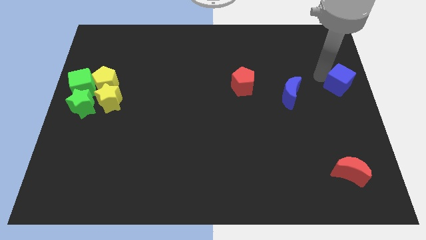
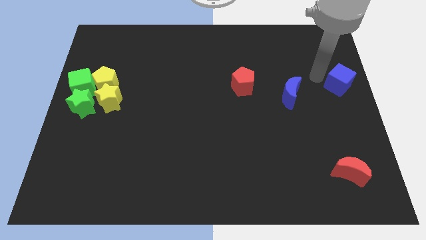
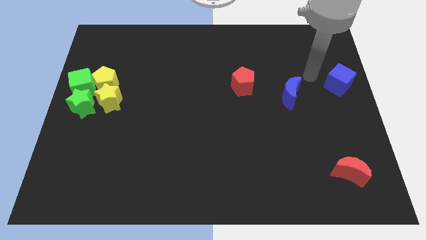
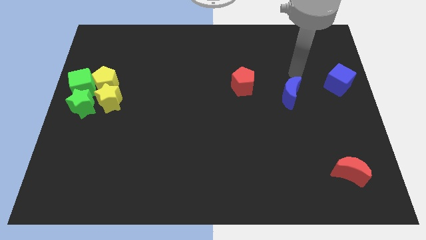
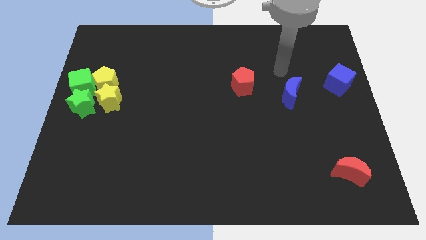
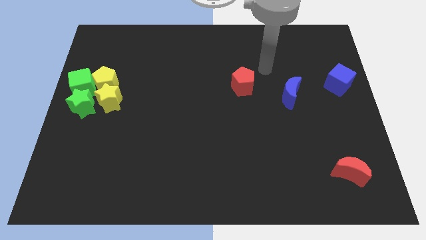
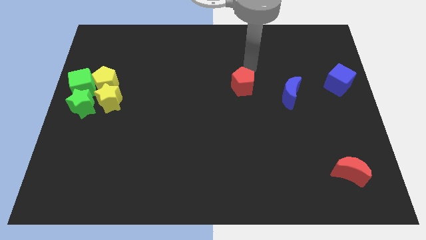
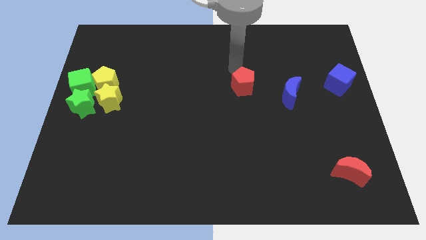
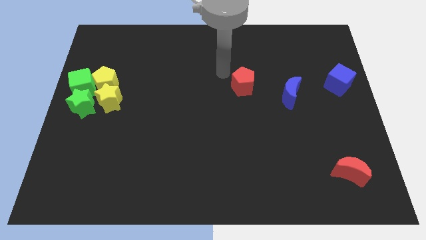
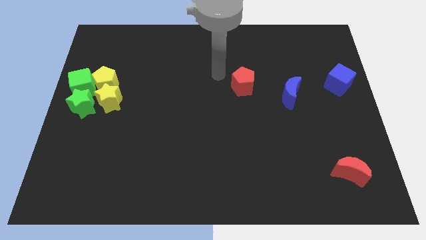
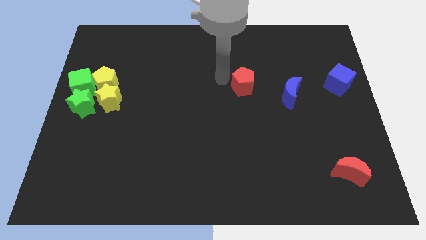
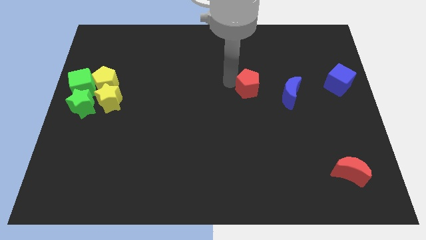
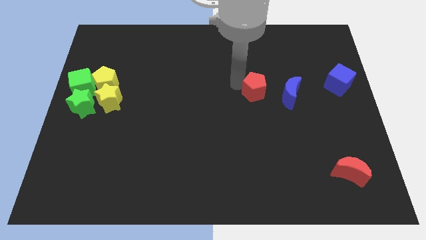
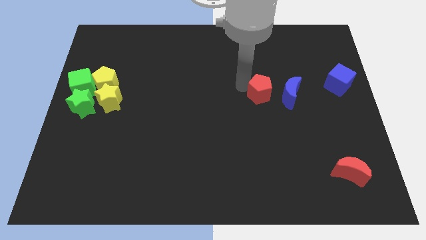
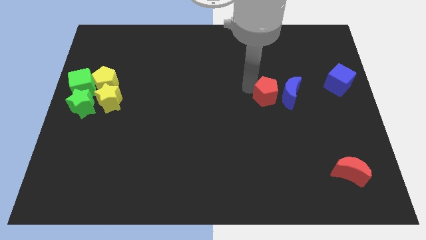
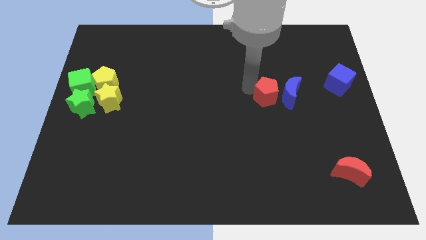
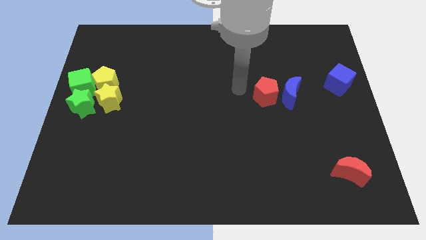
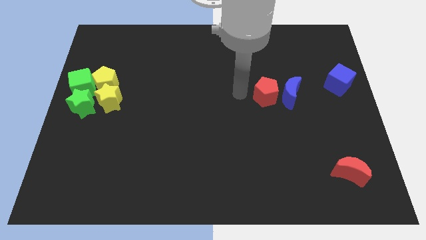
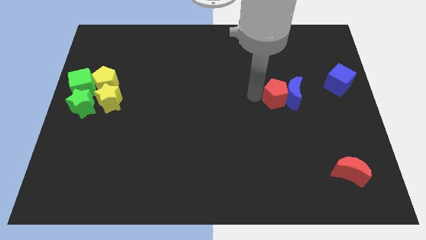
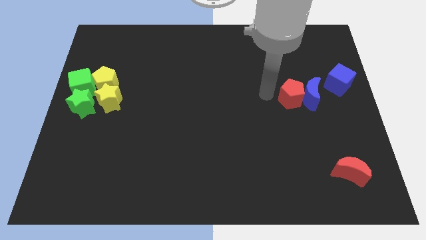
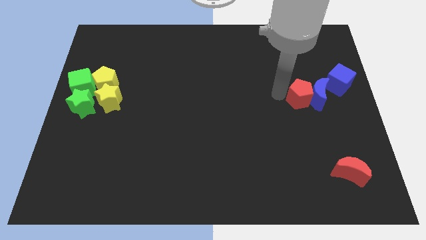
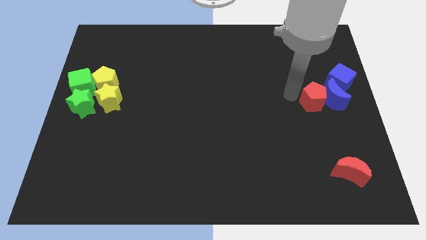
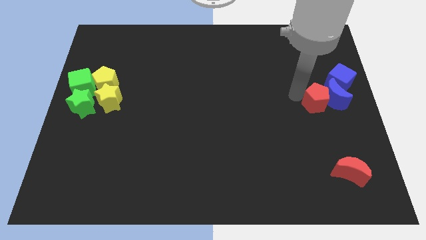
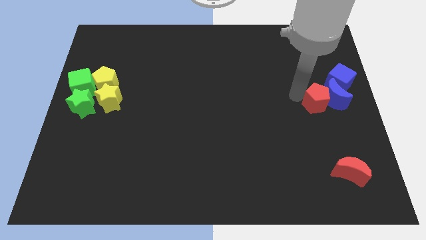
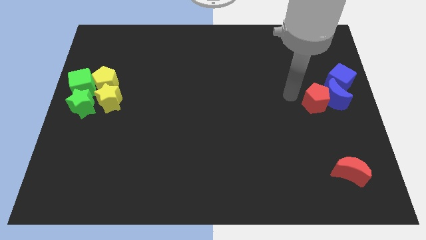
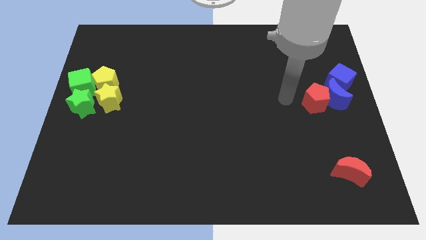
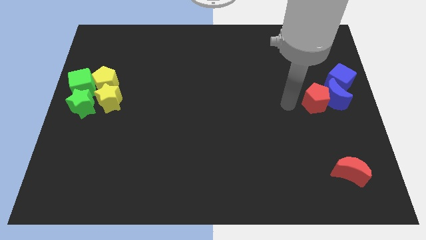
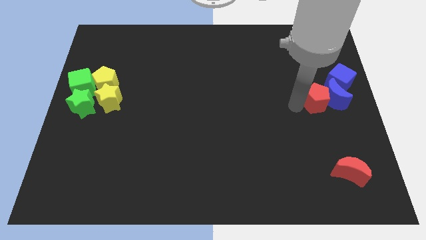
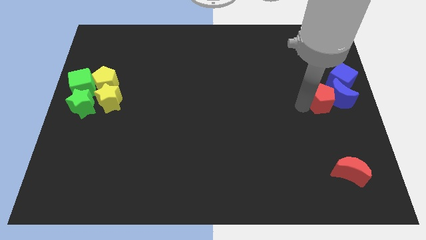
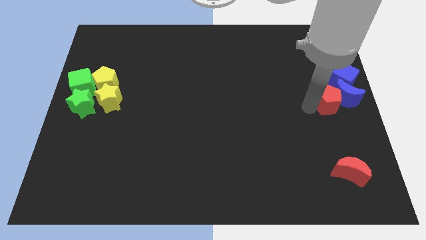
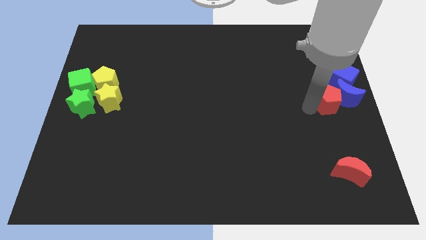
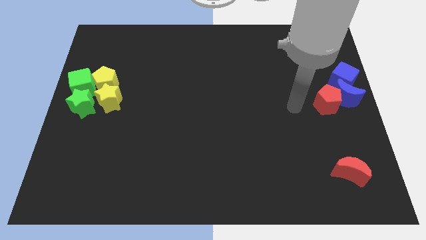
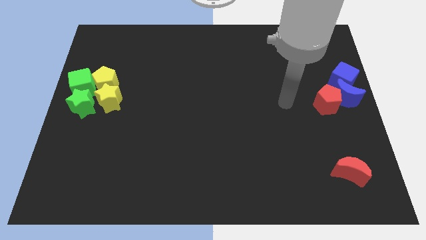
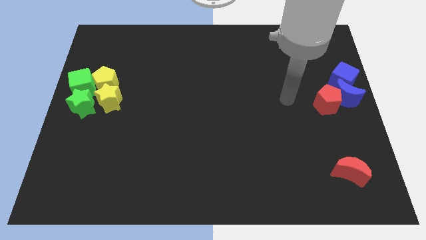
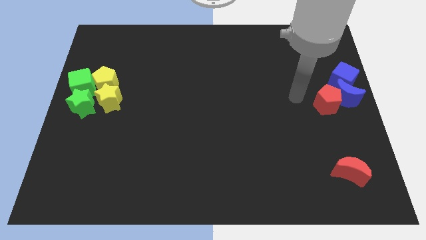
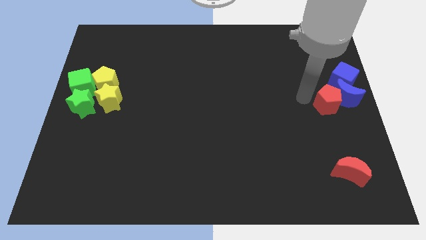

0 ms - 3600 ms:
push the blue crescent with the red pentagon into the blue cube

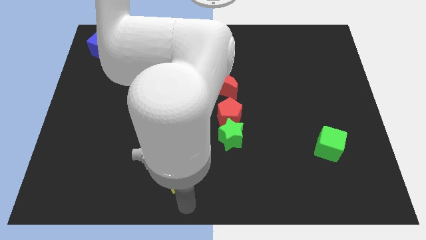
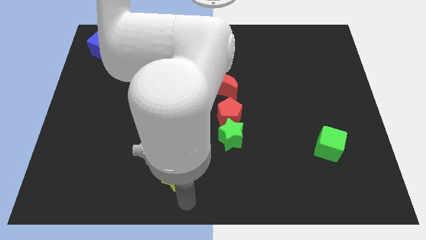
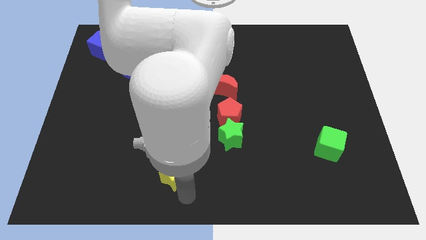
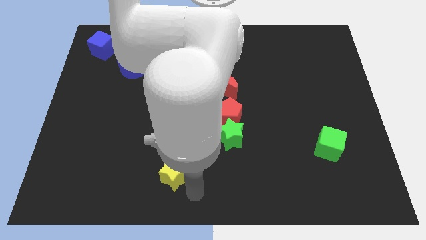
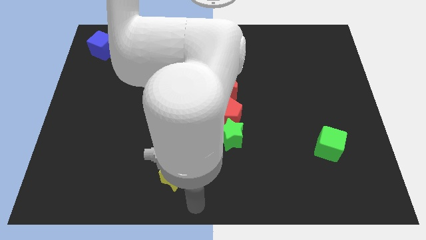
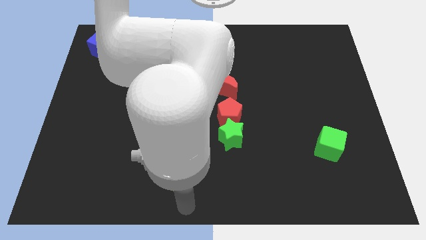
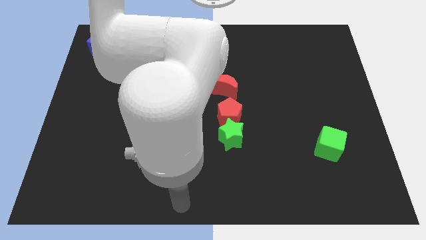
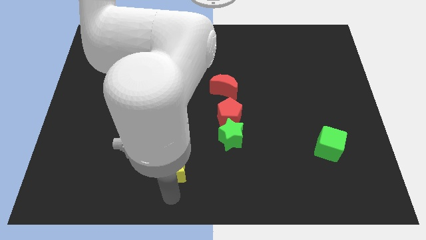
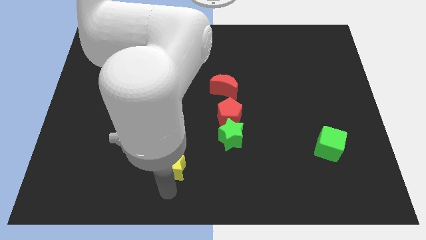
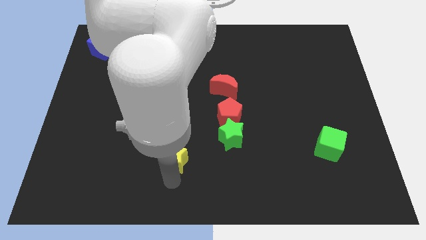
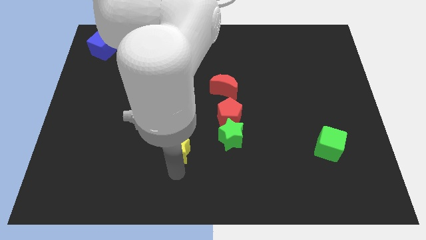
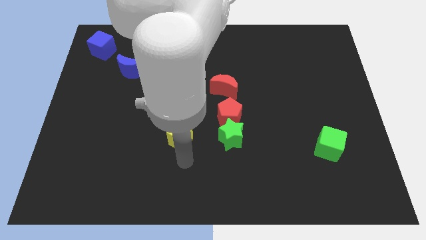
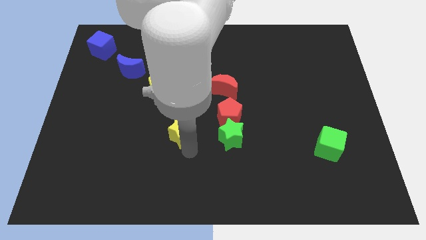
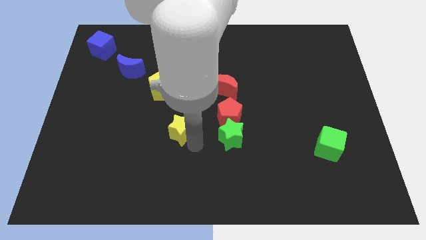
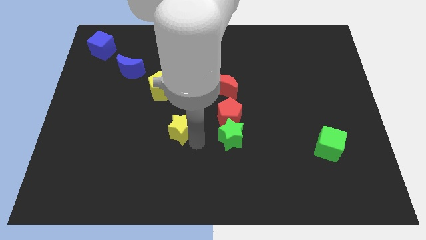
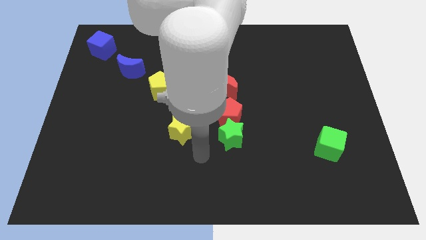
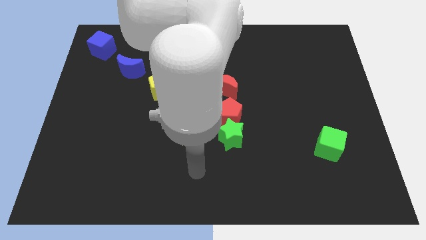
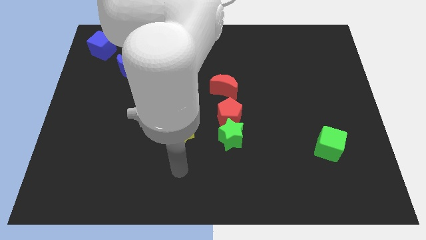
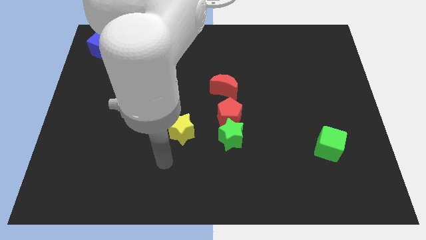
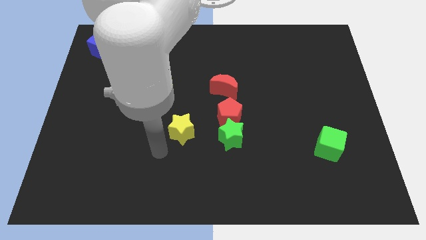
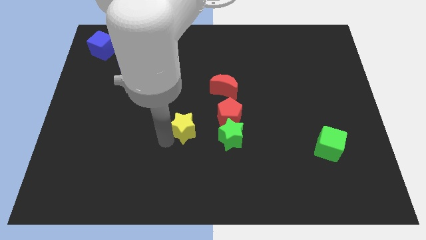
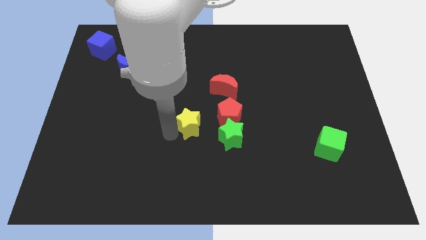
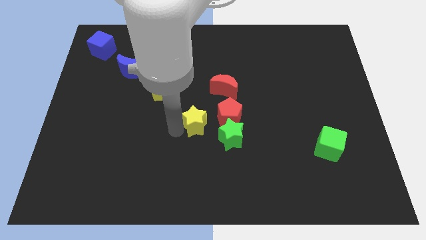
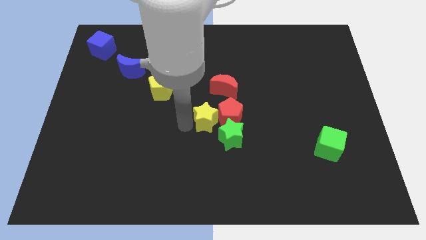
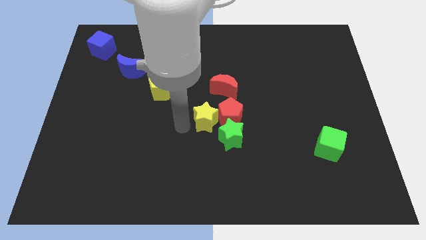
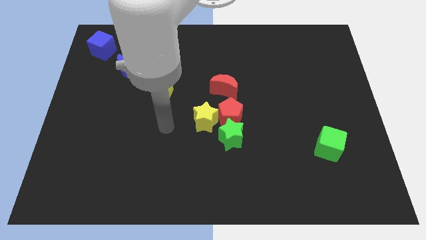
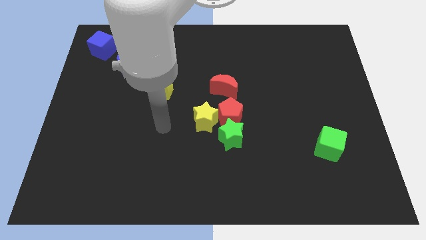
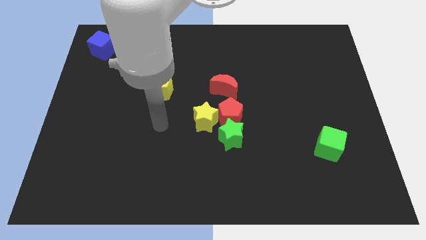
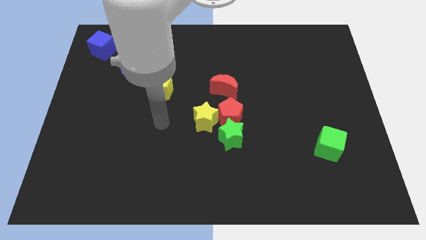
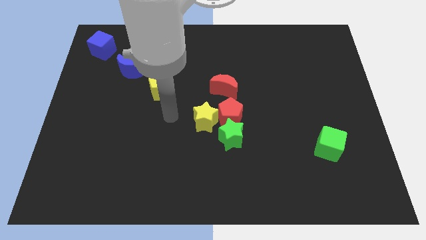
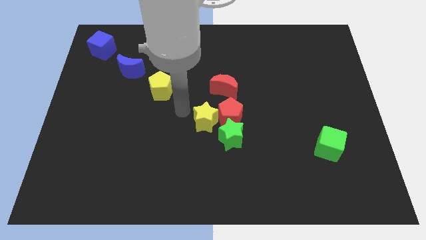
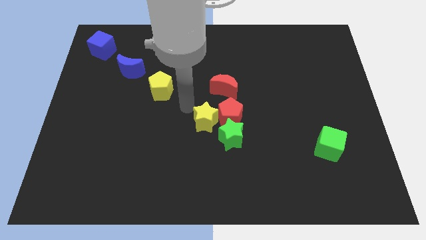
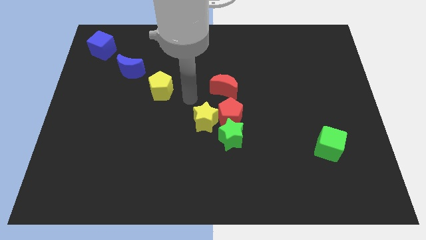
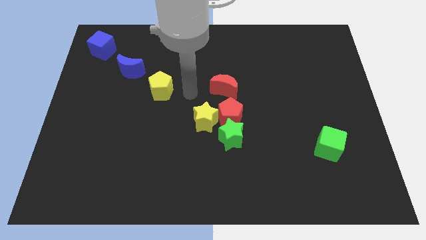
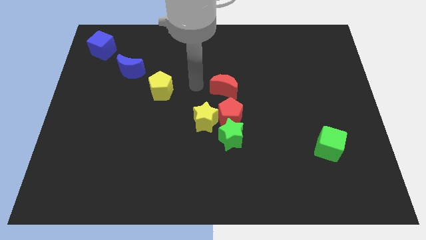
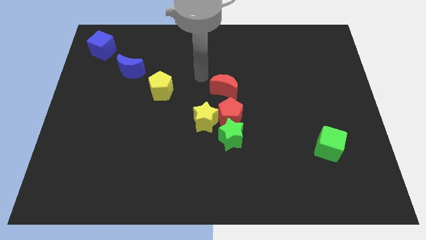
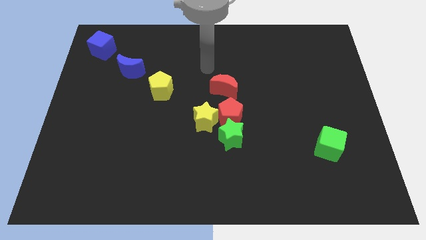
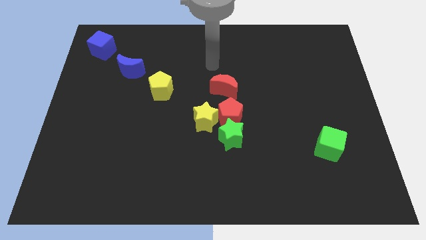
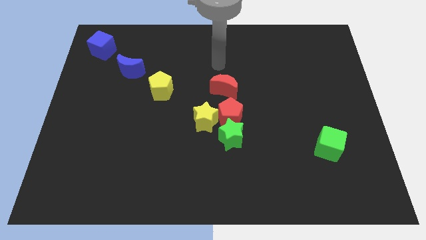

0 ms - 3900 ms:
push the yellow star into the red pentagon

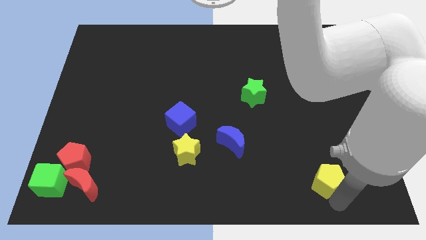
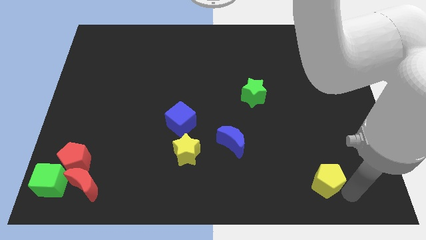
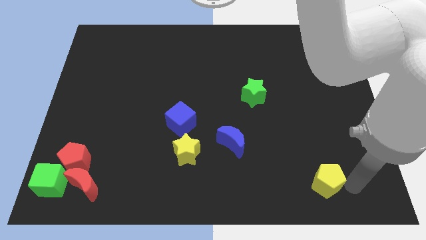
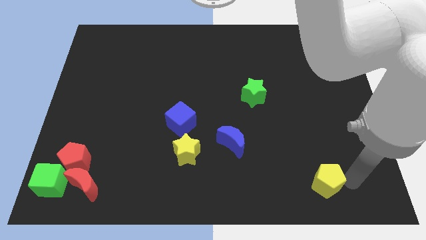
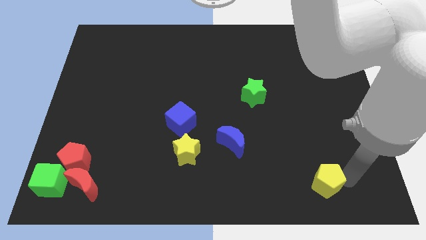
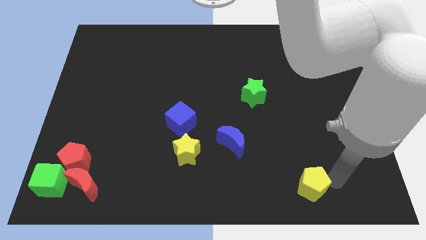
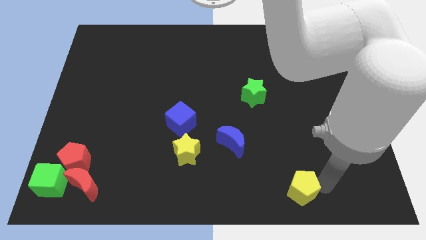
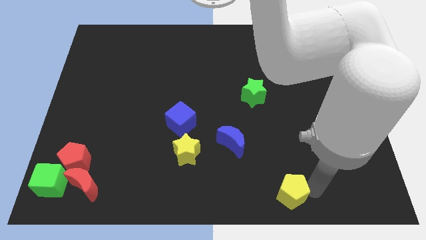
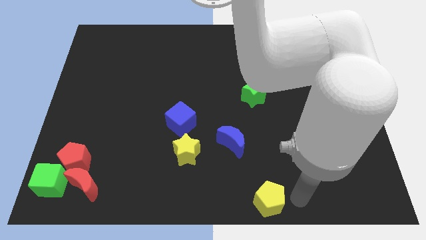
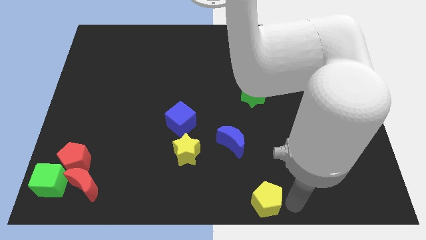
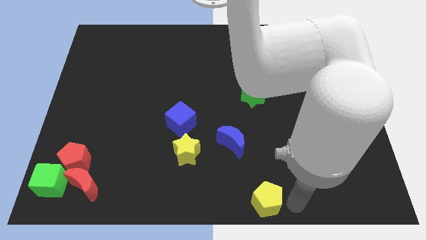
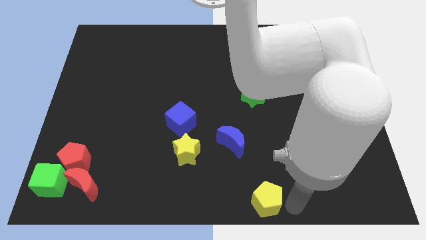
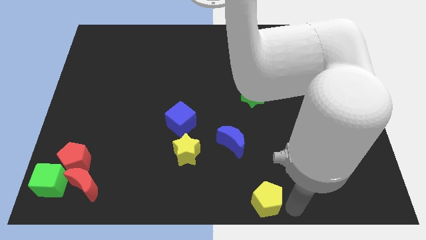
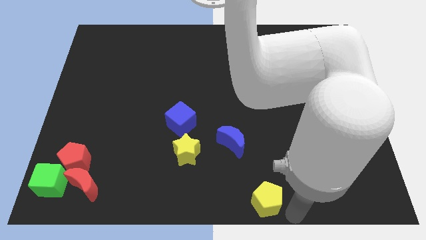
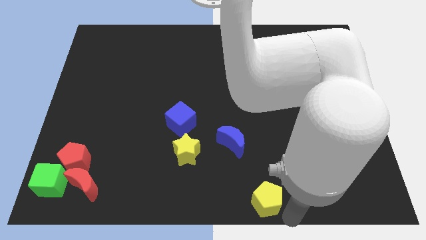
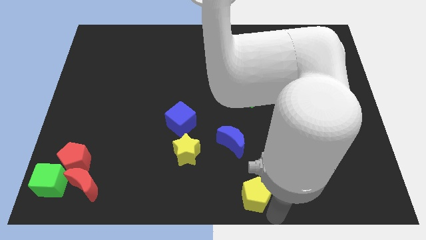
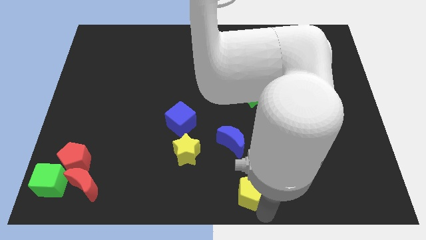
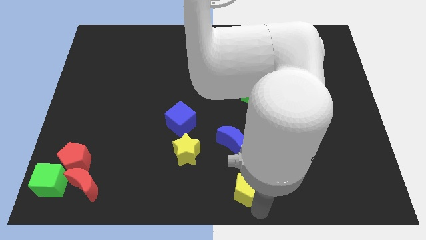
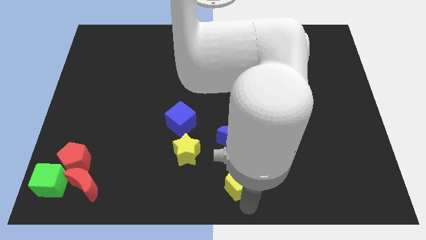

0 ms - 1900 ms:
place yellow pentagon to the bottom of blue moon
